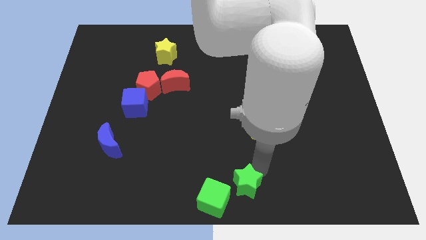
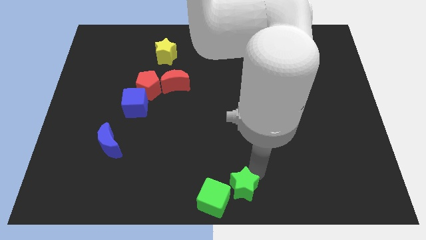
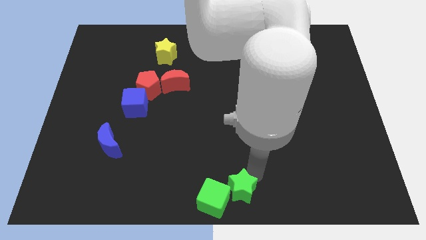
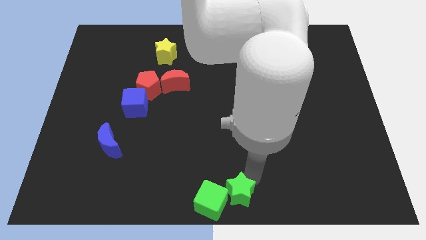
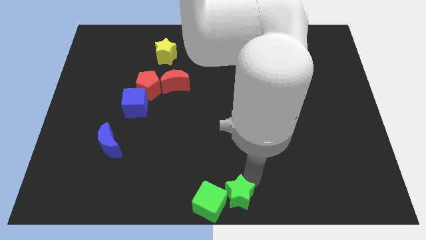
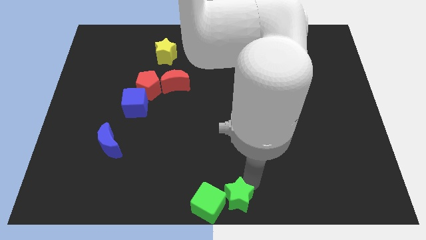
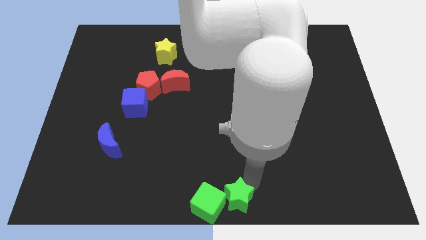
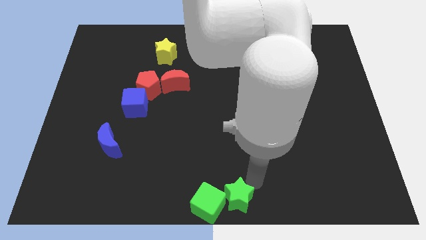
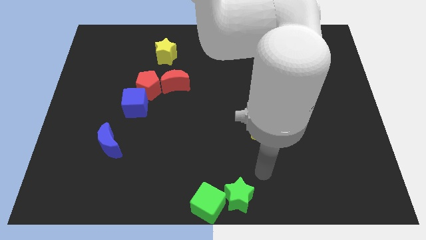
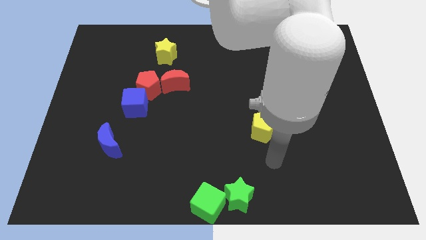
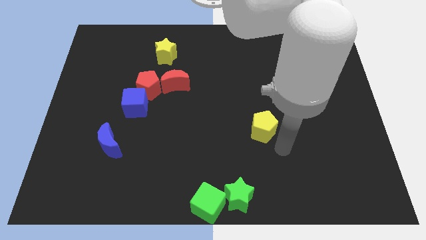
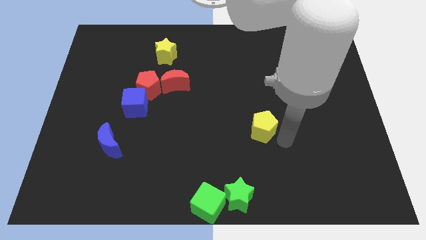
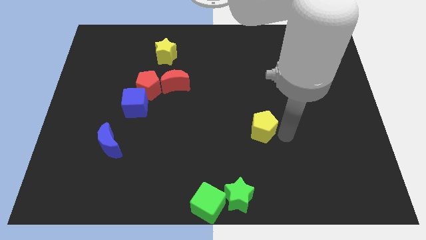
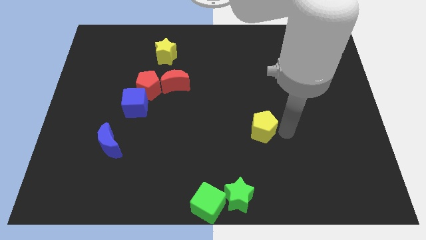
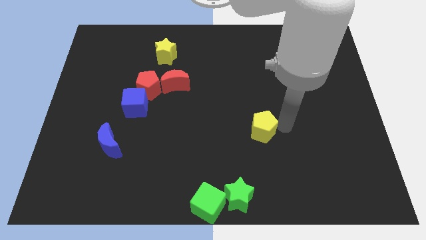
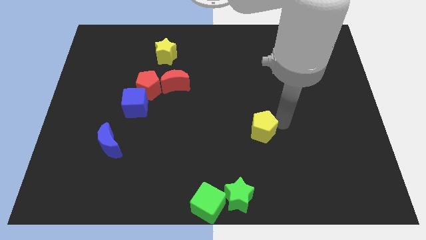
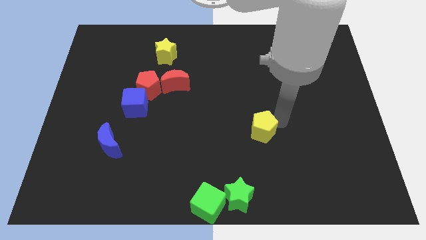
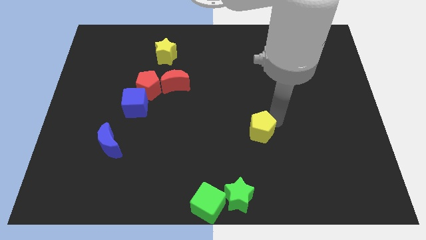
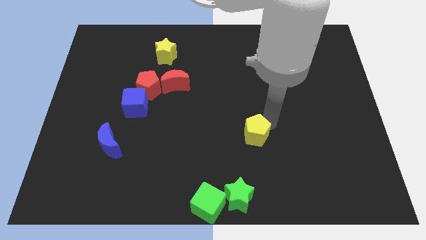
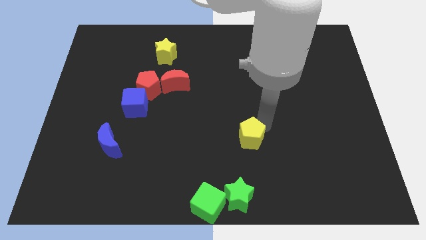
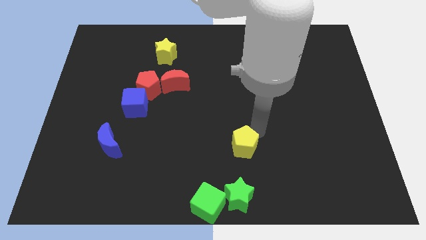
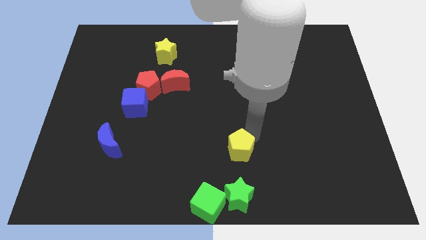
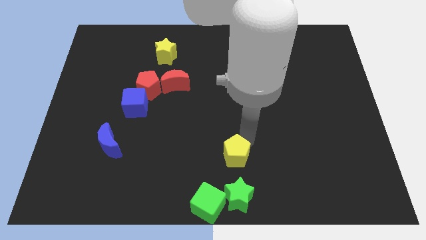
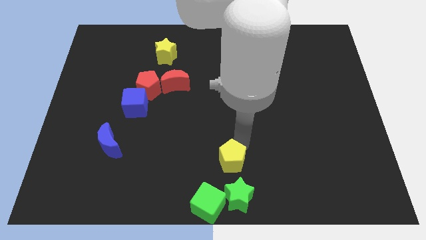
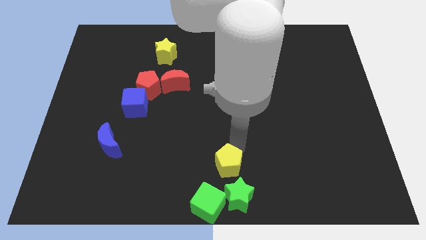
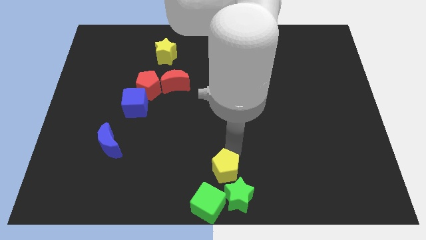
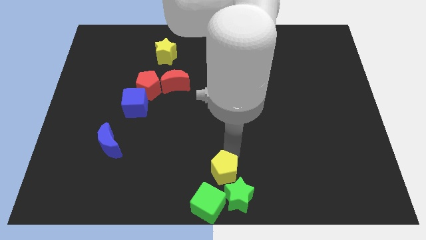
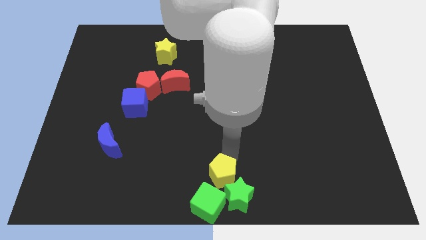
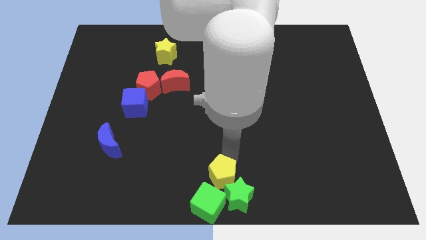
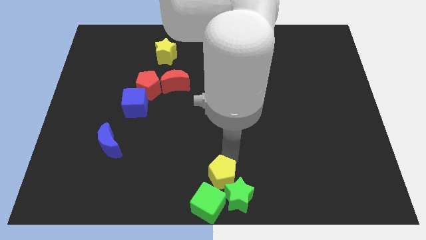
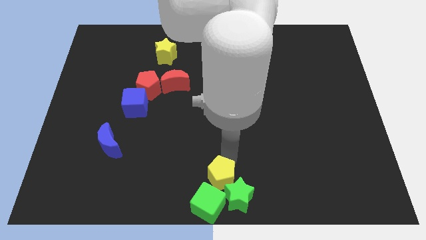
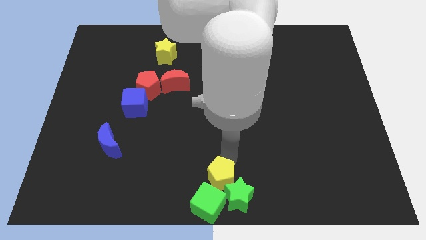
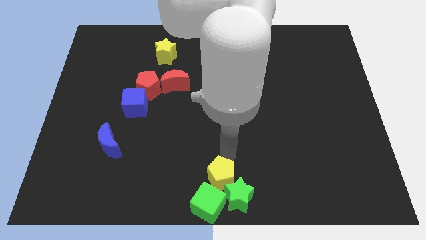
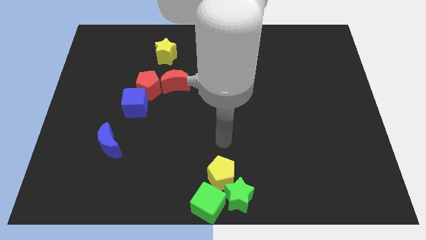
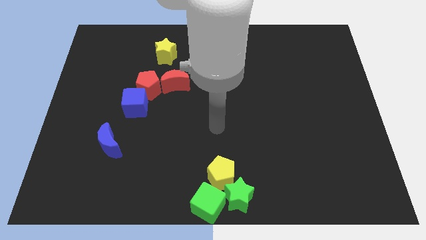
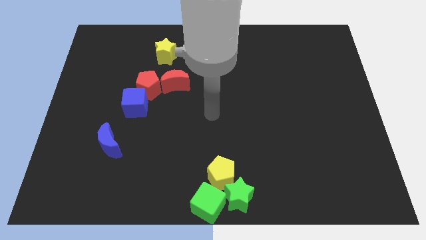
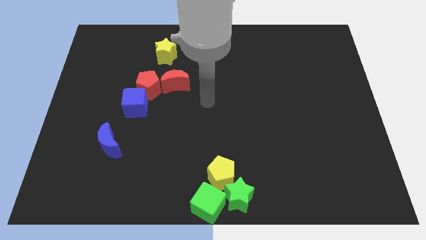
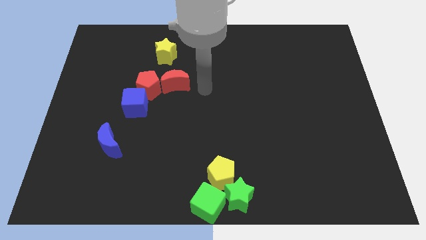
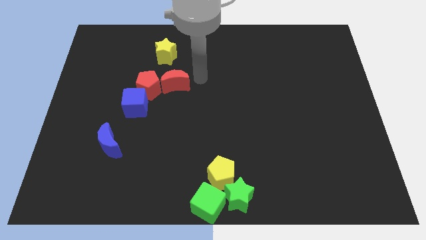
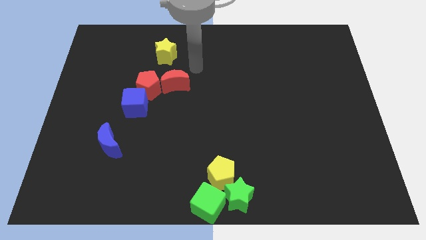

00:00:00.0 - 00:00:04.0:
push the yellow pentagon into the green cube and green star from the top

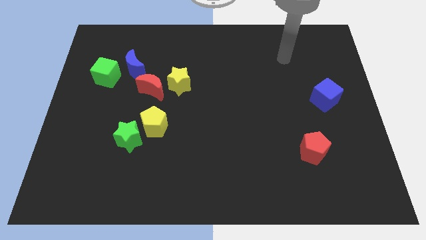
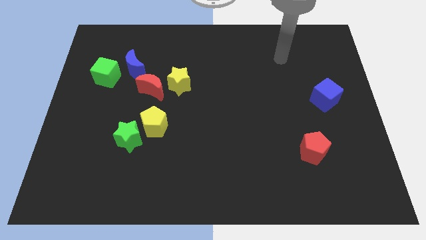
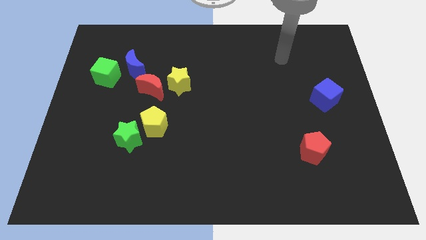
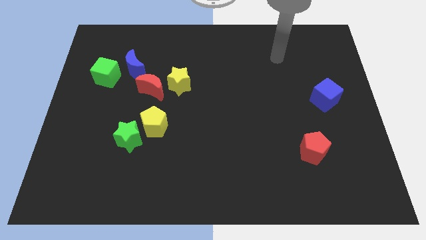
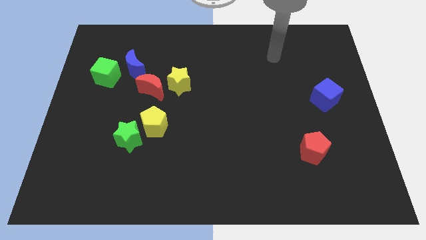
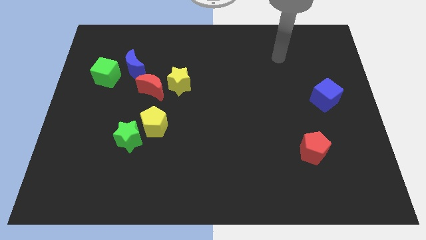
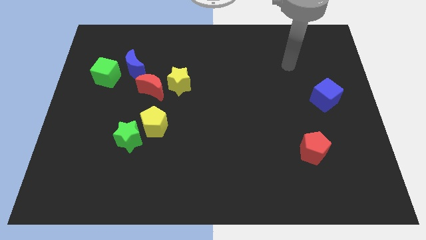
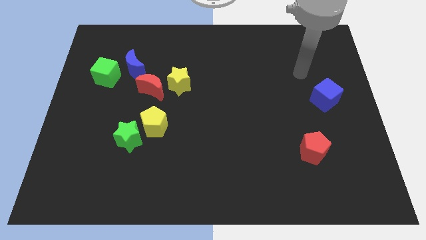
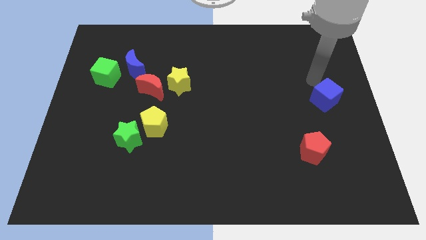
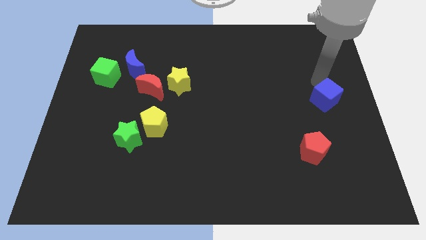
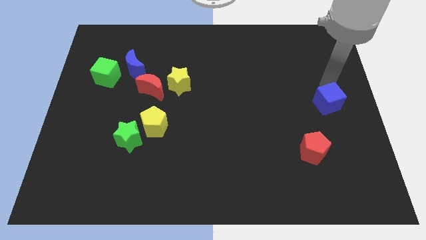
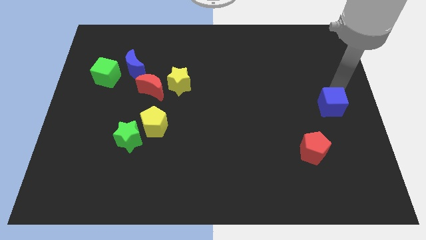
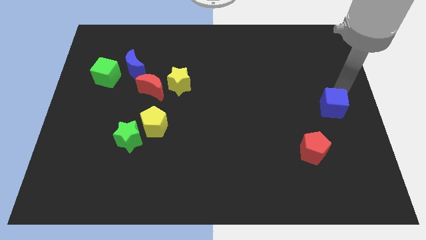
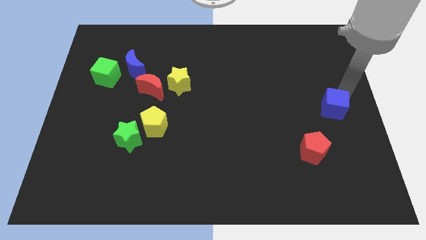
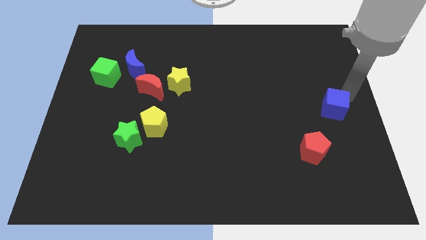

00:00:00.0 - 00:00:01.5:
slightly push the green cube towards the bottom side of the board

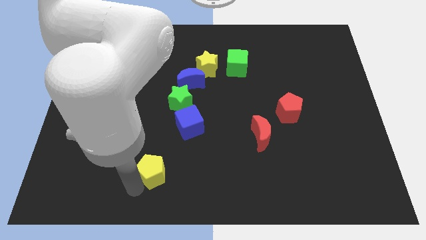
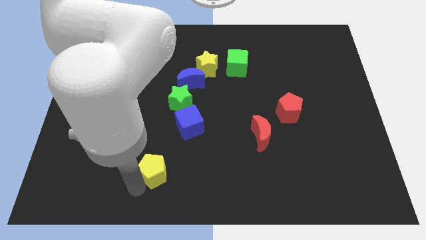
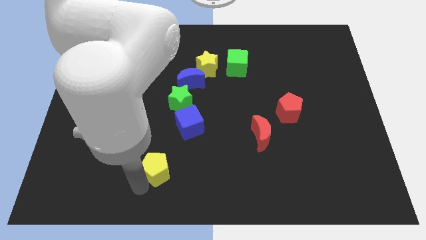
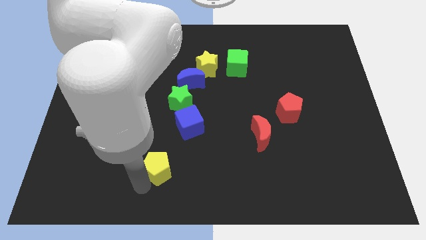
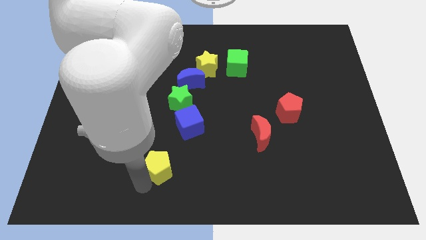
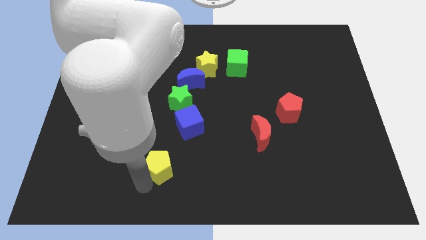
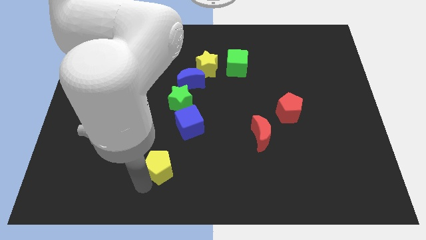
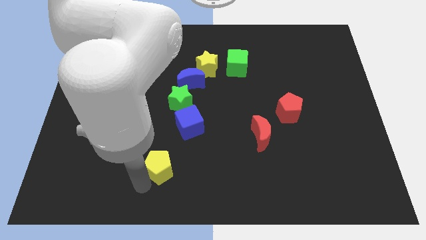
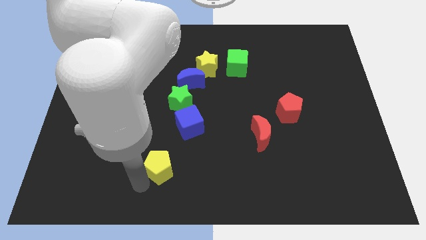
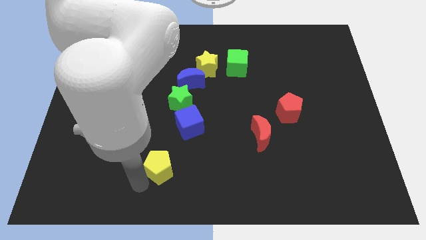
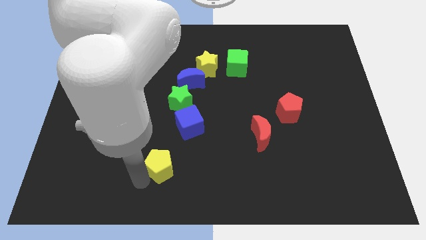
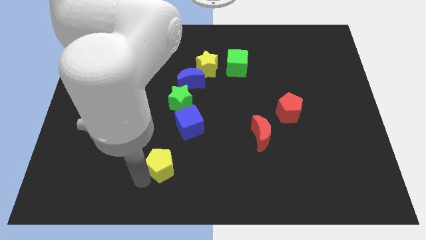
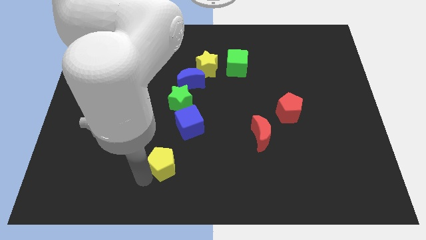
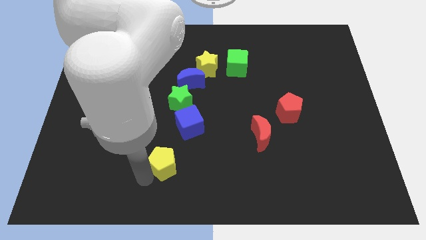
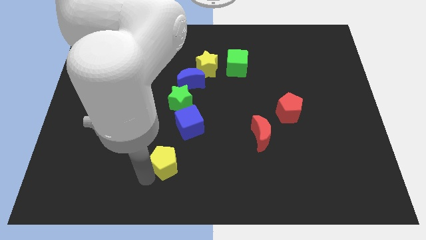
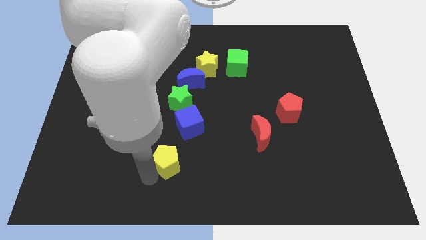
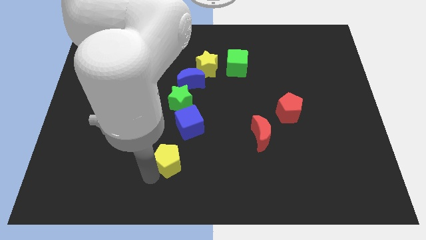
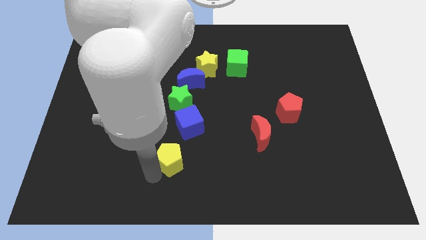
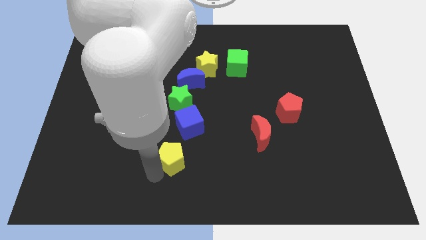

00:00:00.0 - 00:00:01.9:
put the yellow pentagon to the bottom left side of the blue cube

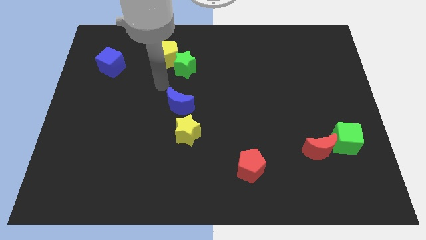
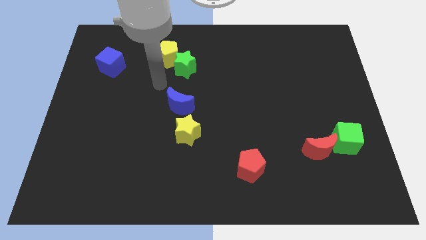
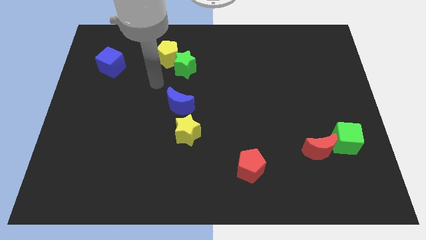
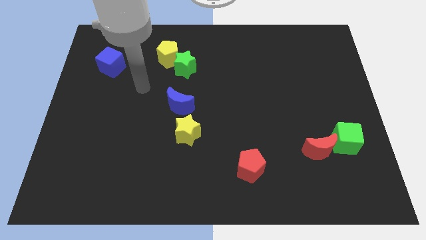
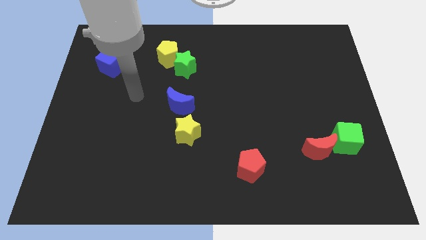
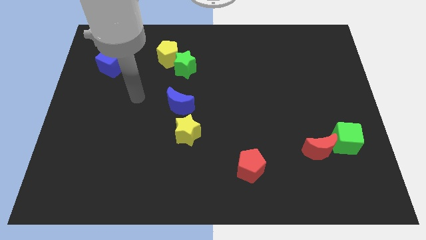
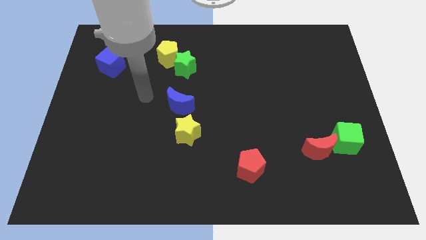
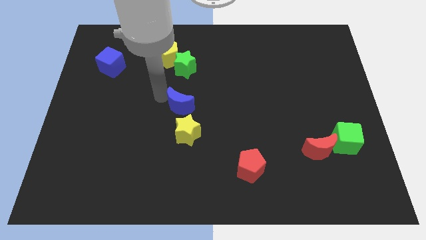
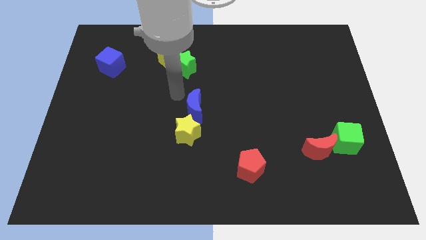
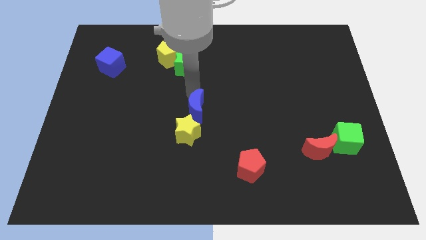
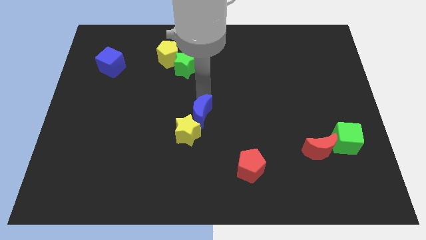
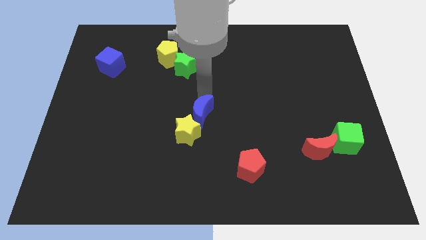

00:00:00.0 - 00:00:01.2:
slightly push the blue crescent to the center of the board

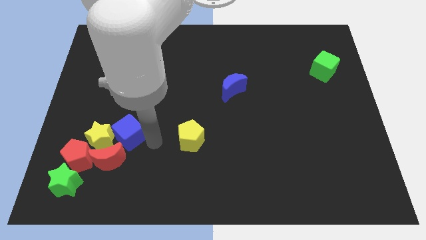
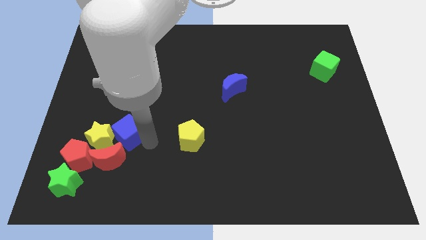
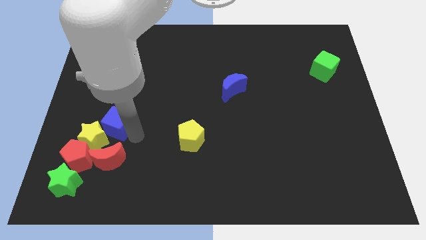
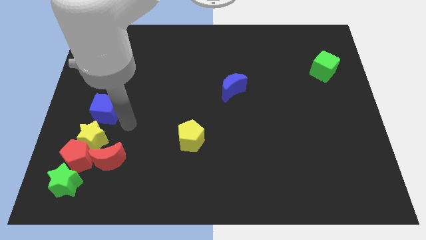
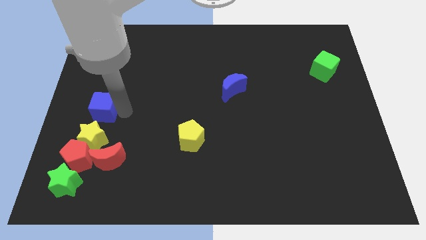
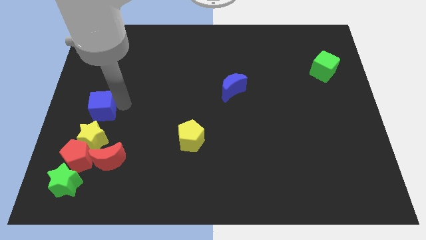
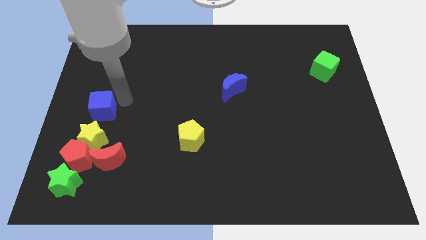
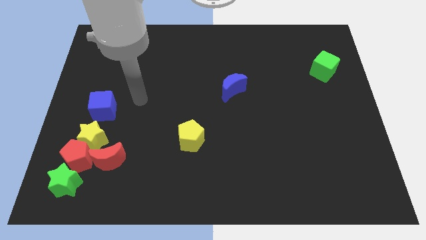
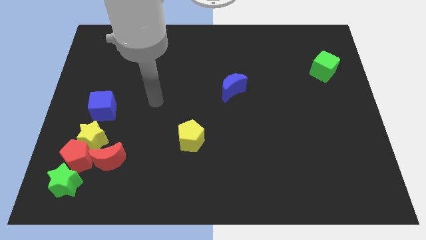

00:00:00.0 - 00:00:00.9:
place blue cube above the yellow star
